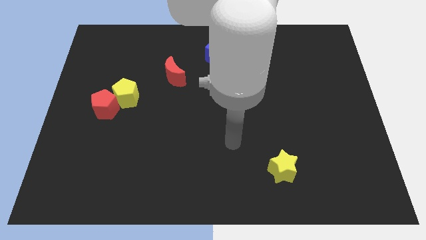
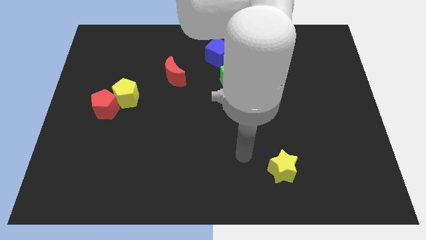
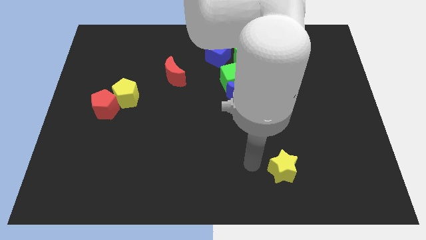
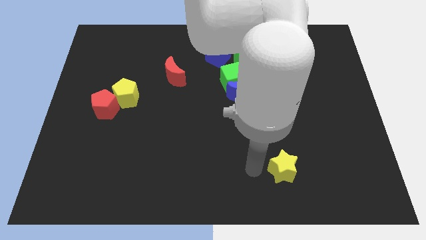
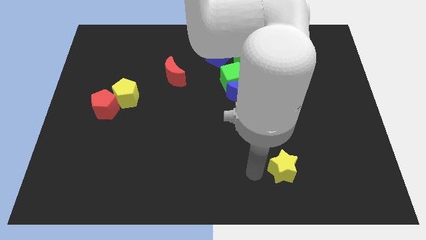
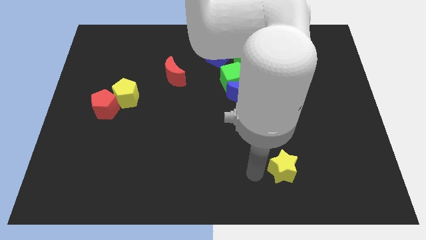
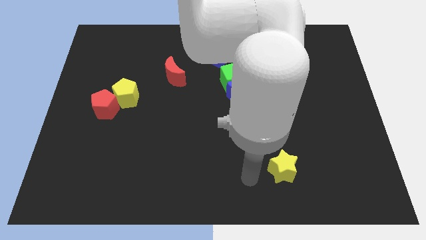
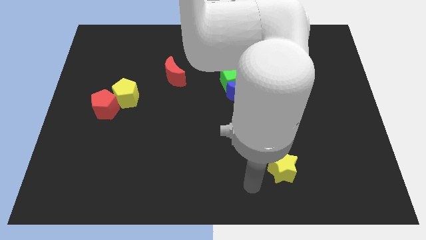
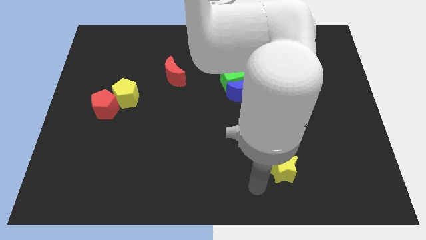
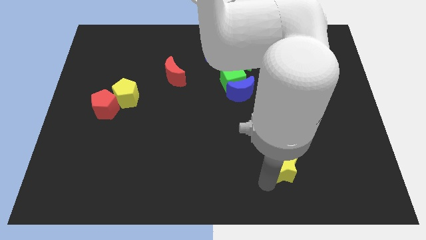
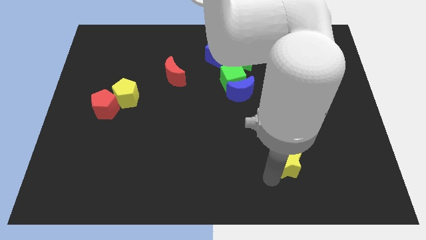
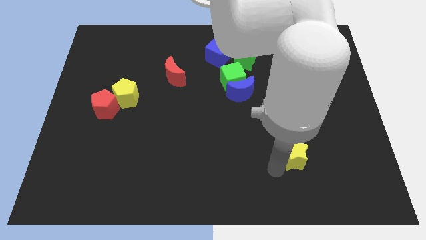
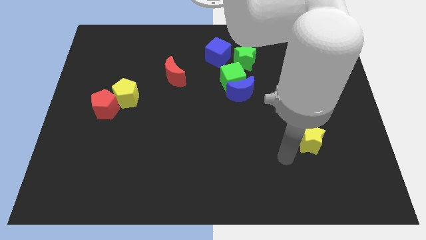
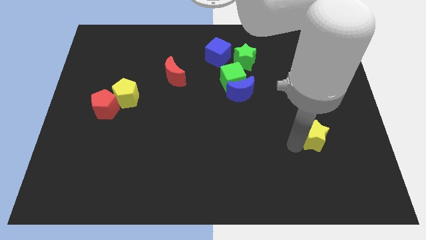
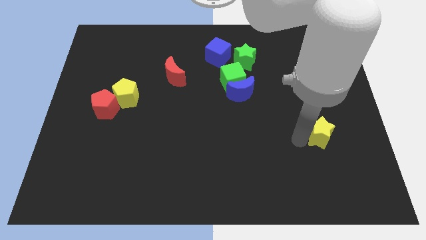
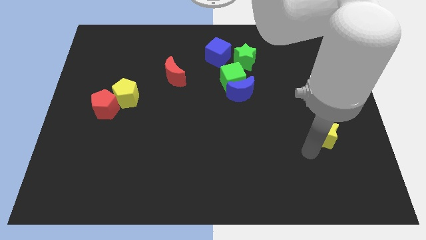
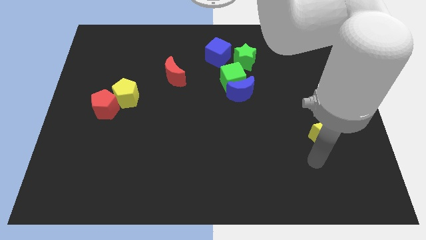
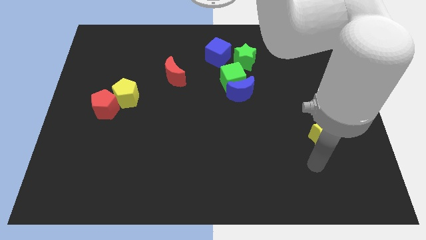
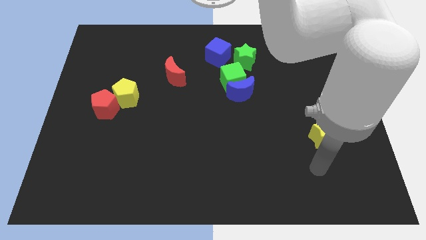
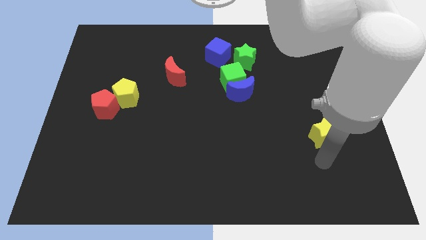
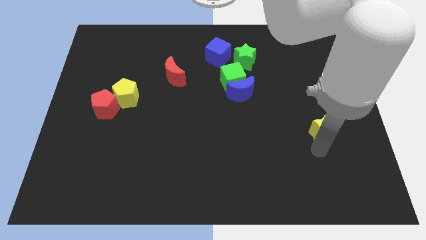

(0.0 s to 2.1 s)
slide the yellow star diagonally to blue moon

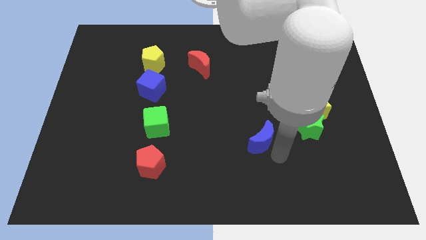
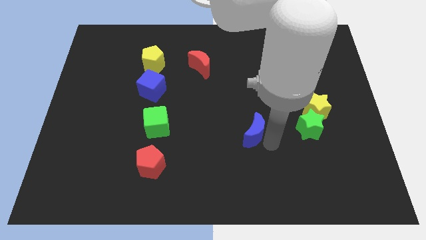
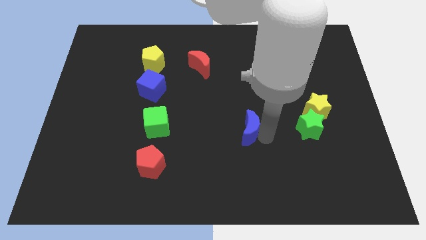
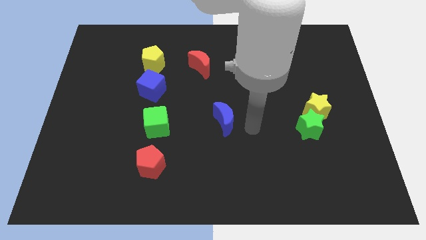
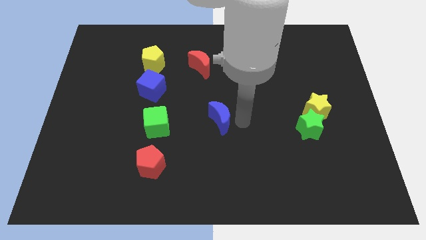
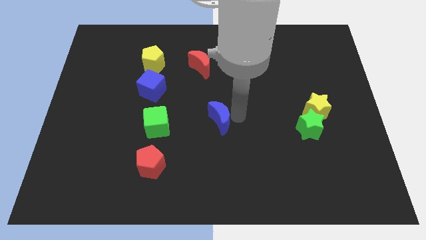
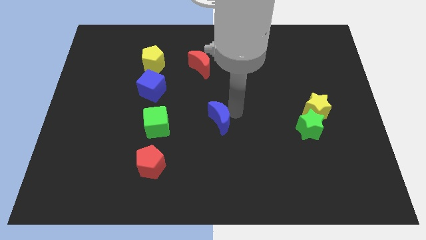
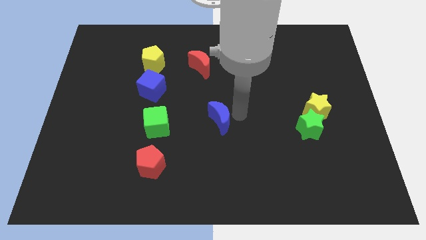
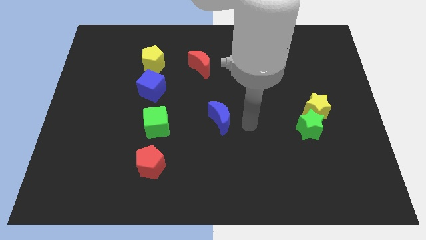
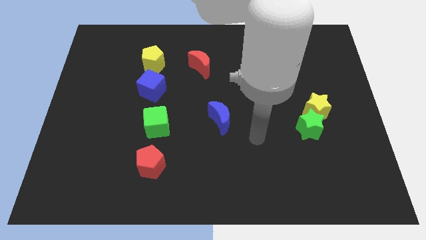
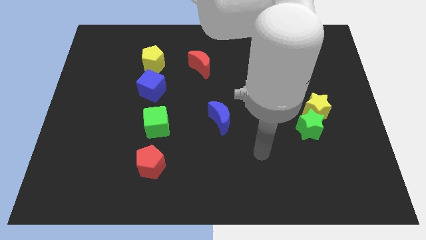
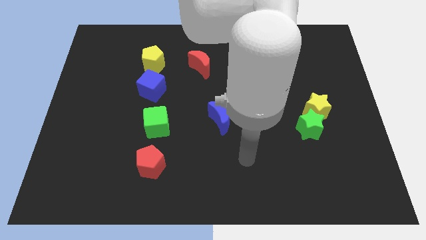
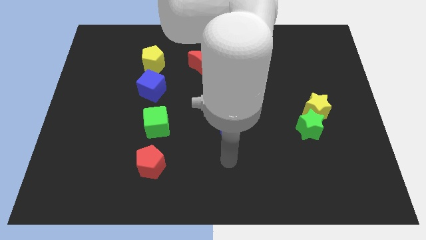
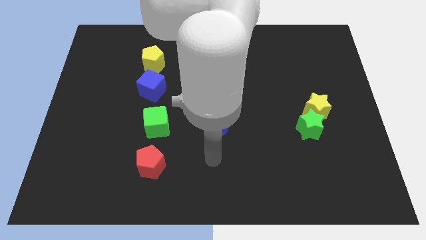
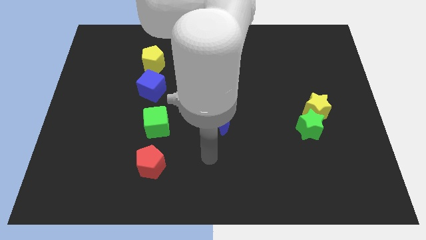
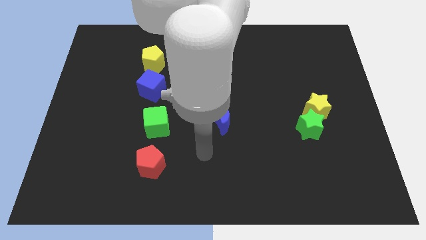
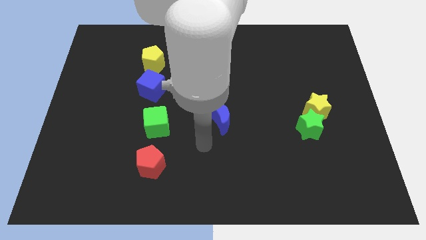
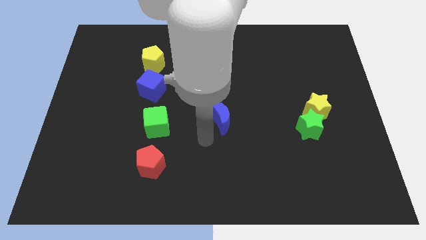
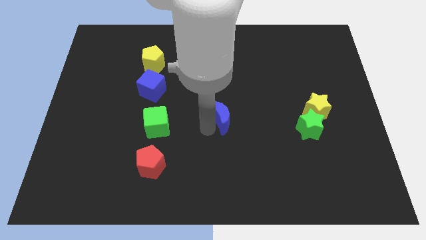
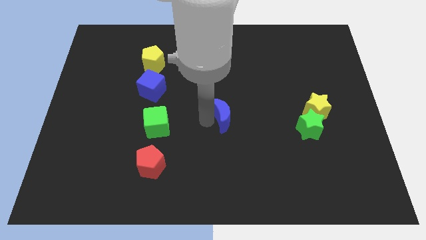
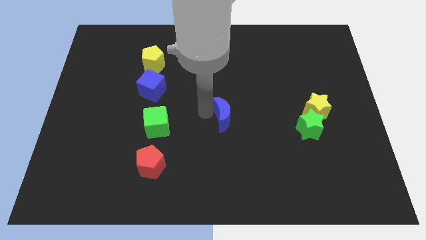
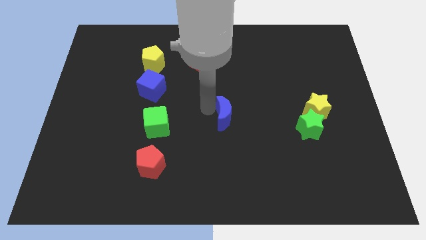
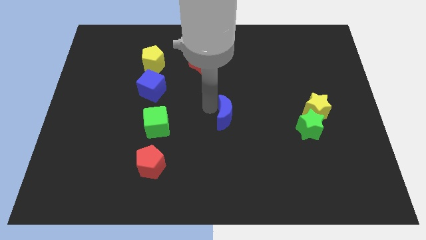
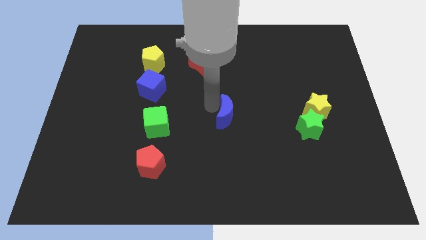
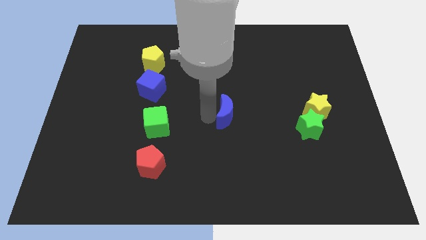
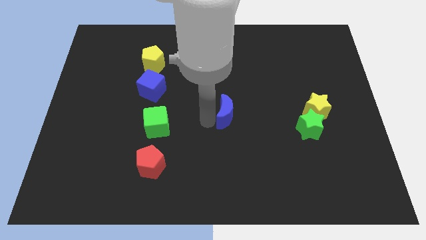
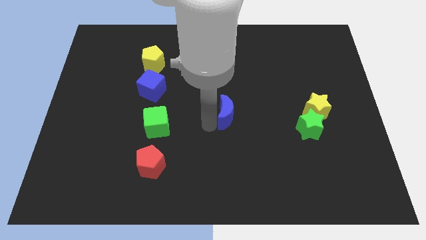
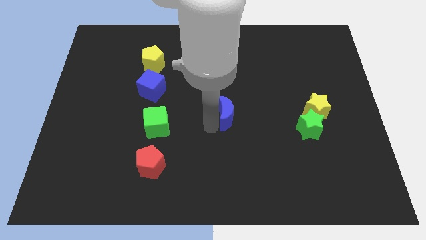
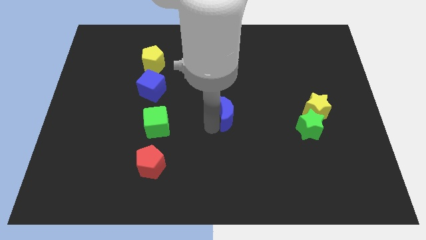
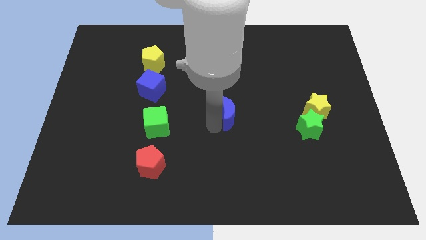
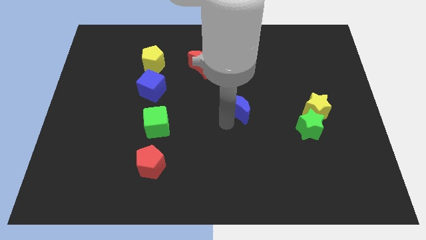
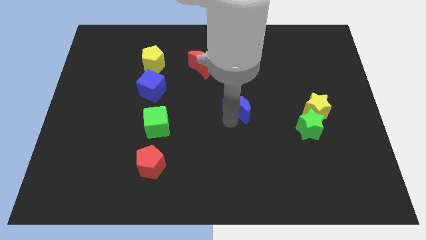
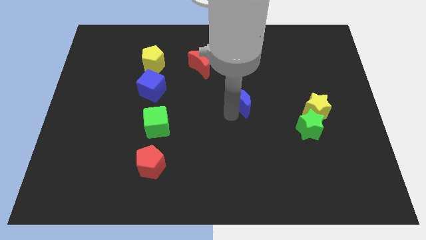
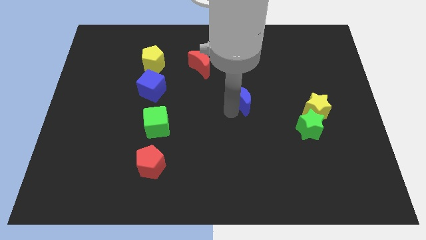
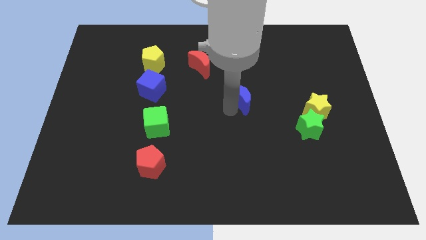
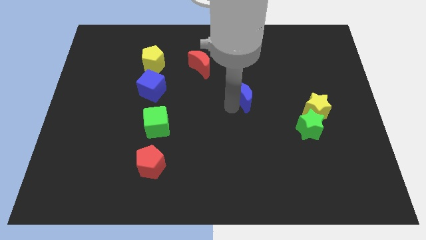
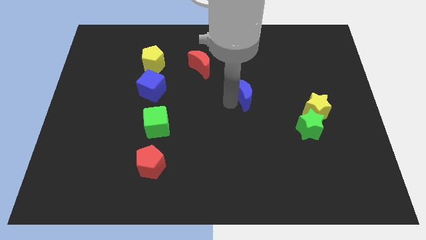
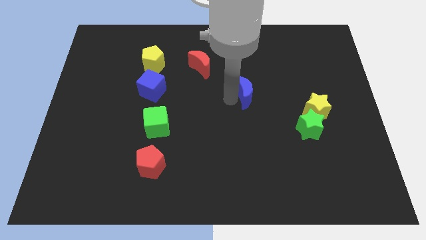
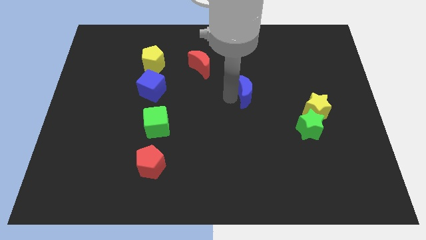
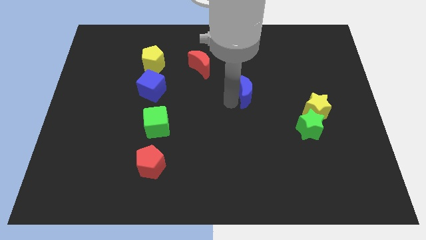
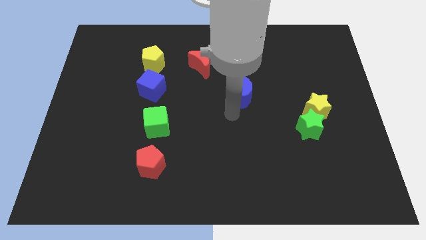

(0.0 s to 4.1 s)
slide the blue crescent diagonally top left to the green star

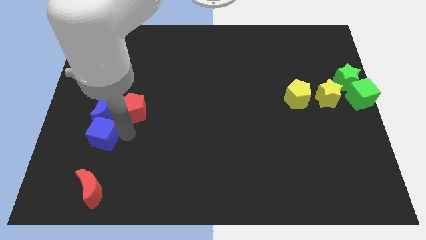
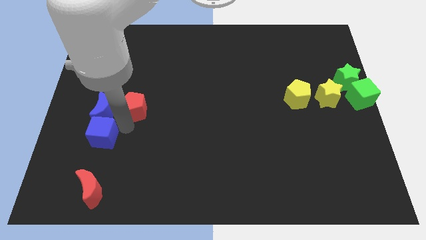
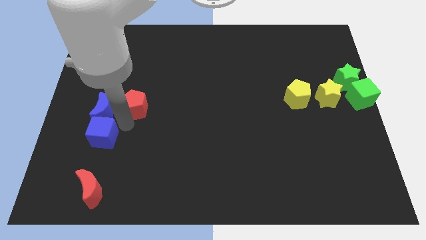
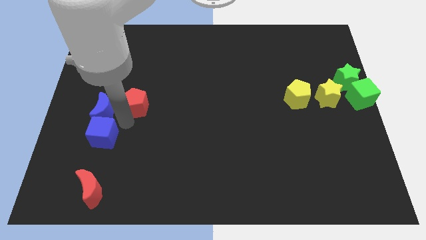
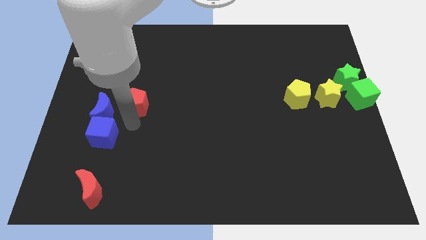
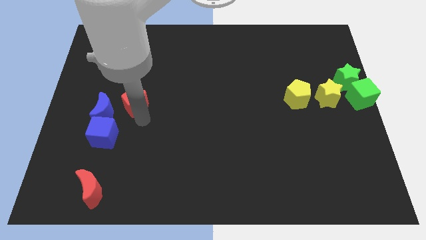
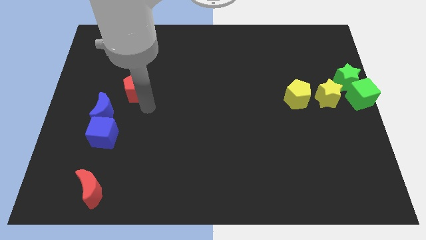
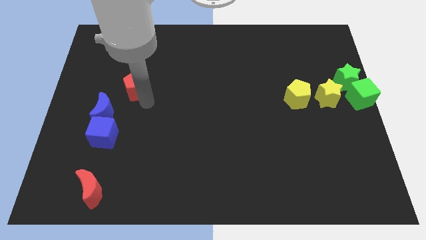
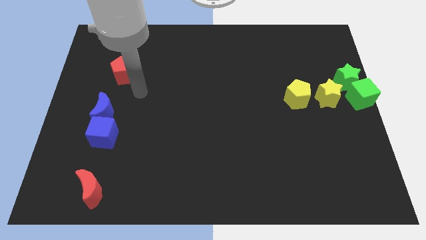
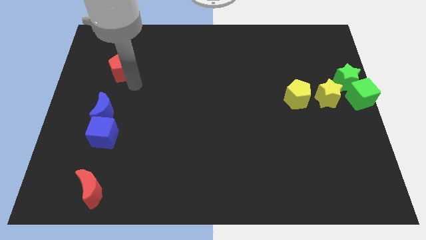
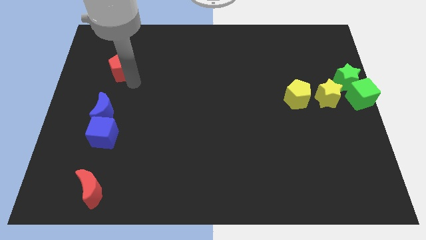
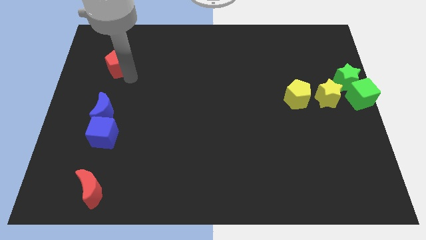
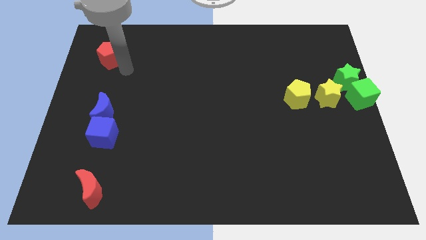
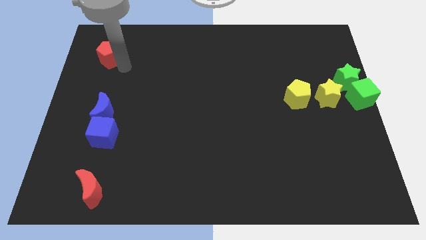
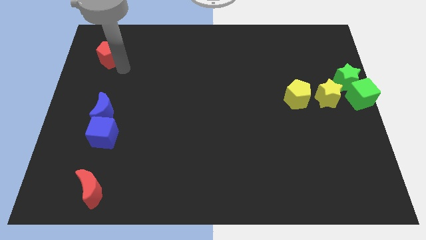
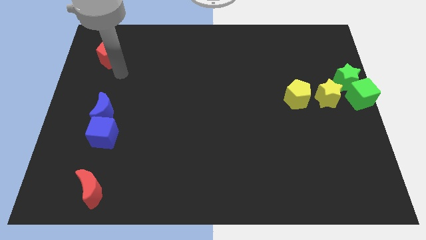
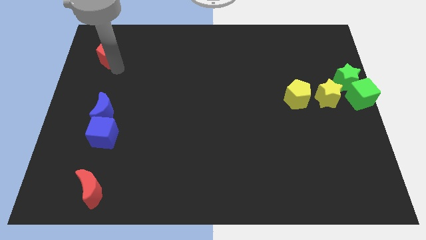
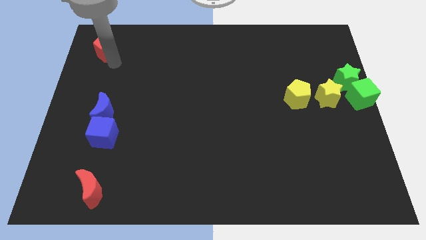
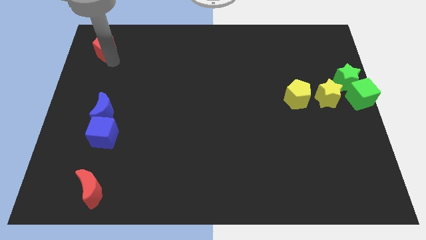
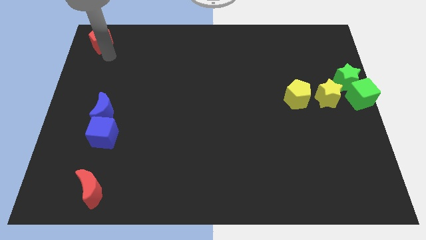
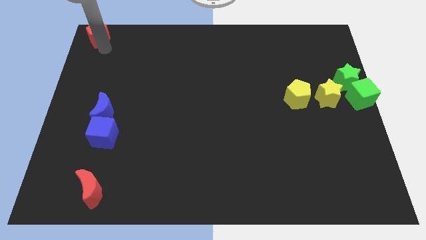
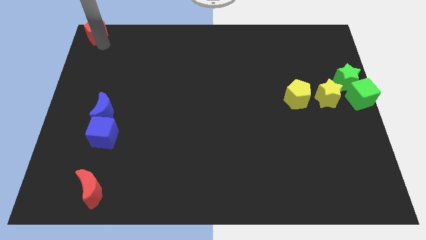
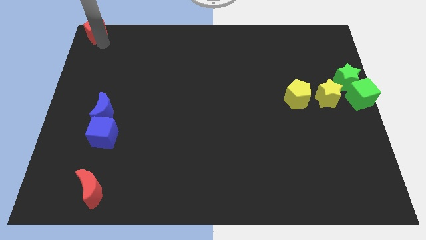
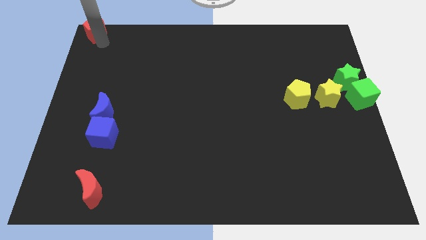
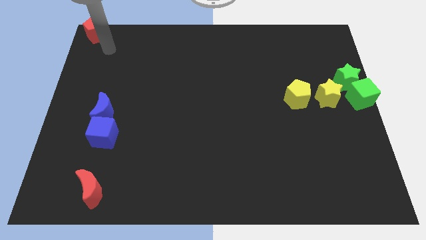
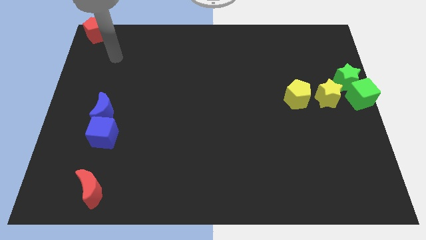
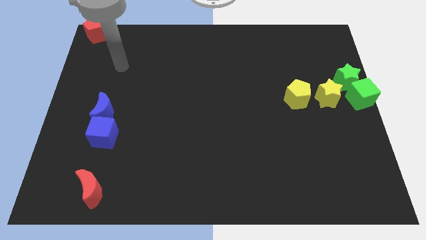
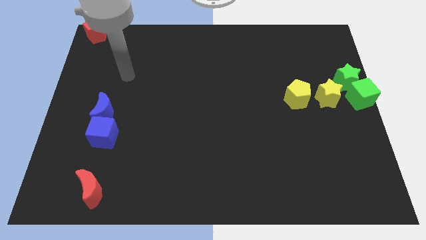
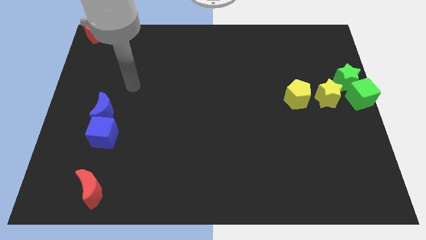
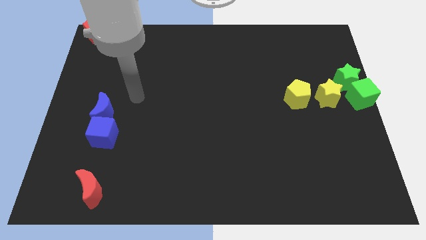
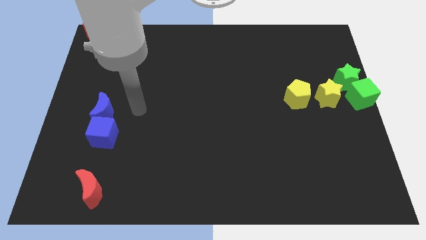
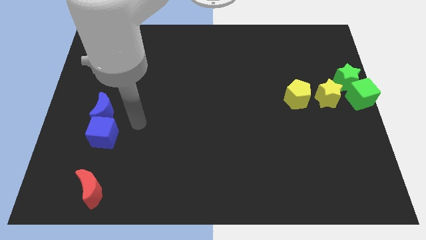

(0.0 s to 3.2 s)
place red pentagon to the top left of the board
